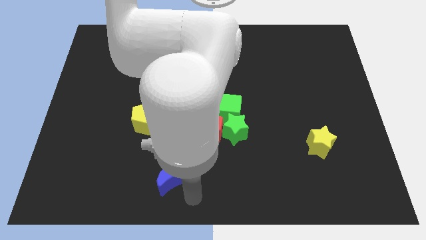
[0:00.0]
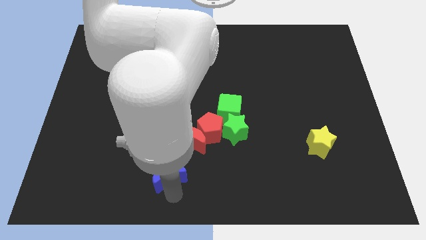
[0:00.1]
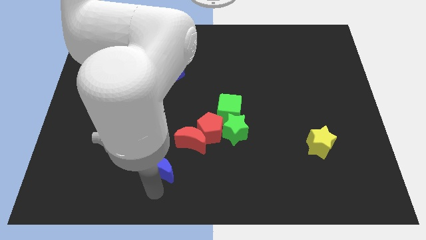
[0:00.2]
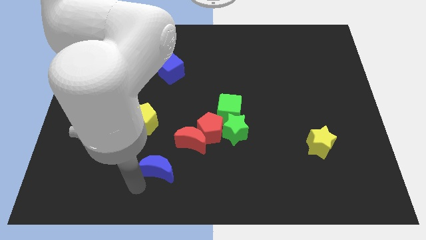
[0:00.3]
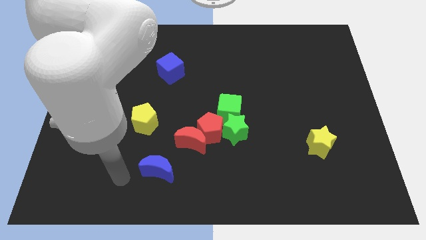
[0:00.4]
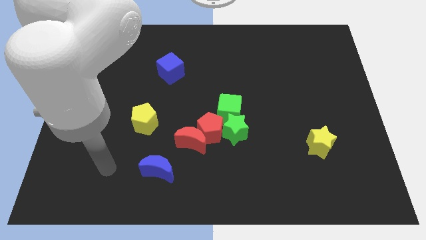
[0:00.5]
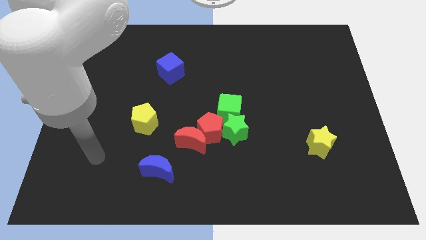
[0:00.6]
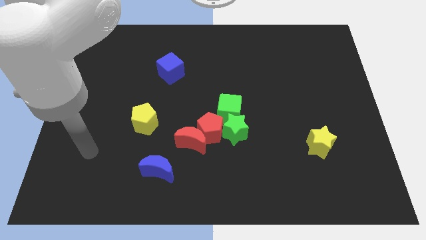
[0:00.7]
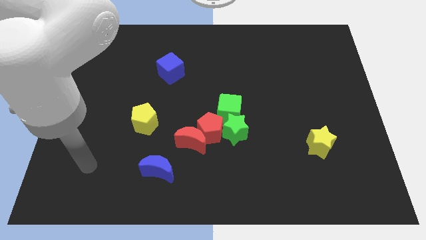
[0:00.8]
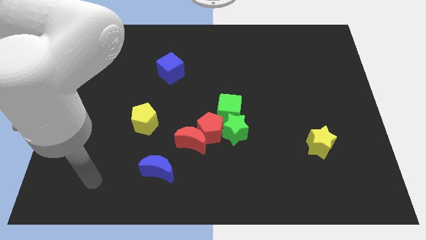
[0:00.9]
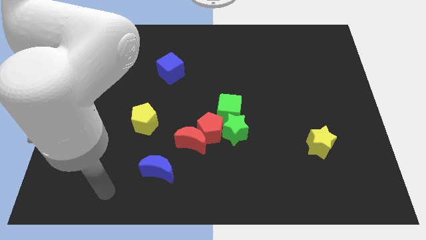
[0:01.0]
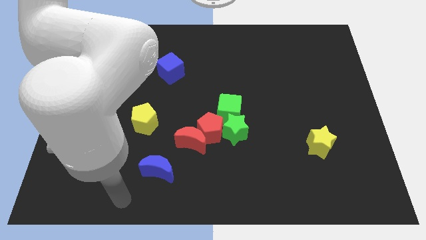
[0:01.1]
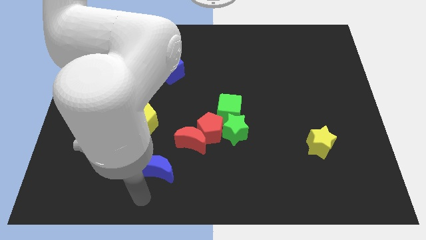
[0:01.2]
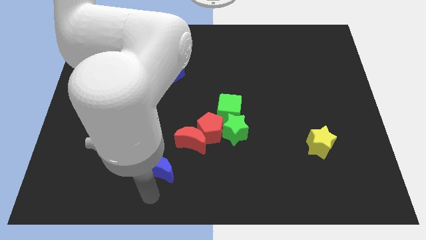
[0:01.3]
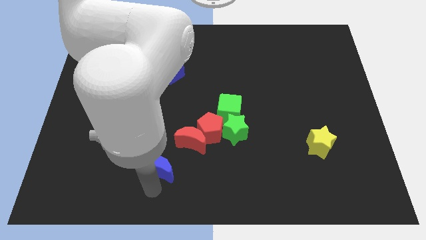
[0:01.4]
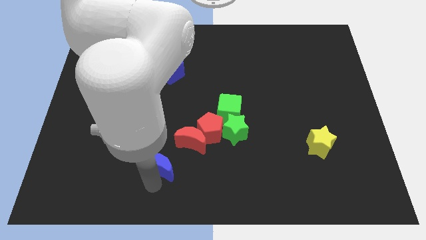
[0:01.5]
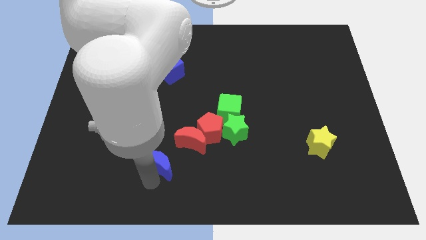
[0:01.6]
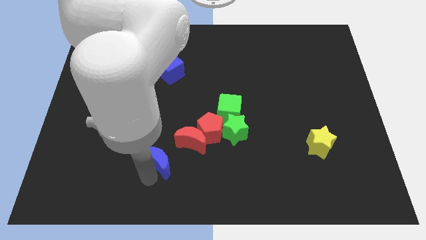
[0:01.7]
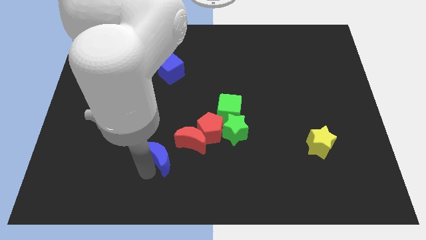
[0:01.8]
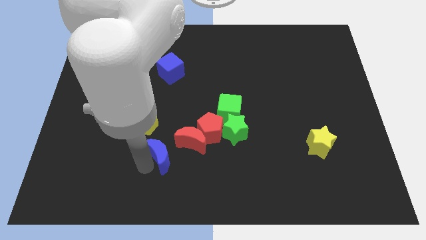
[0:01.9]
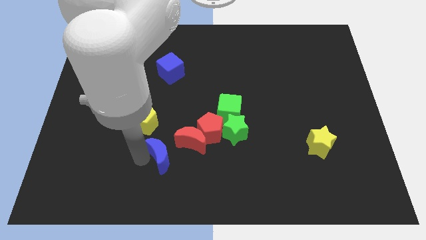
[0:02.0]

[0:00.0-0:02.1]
move the blue moon close to the red moon

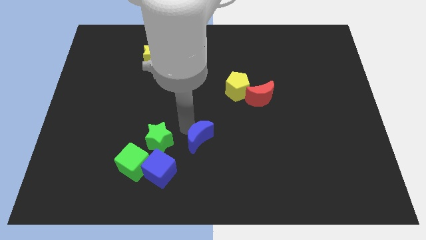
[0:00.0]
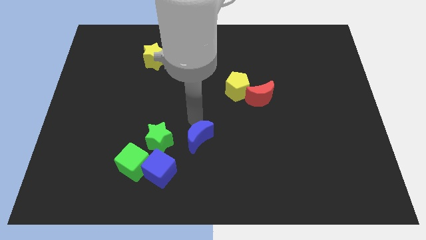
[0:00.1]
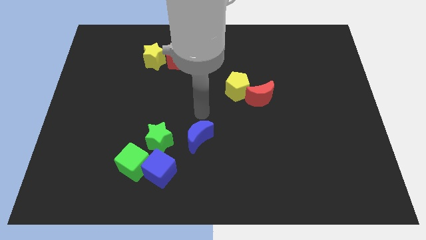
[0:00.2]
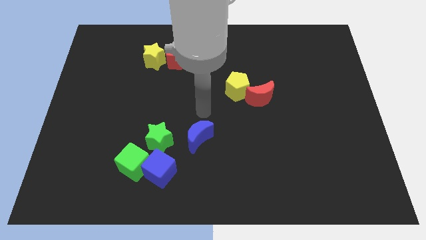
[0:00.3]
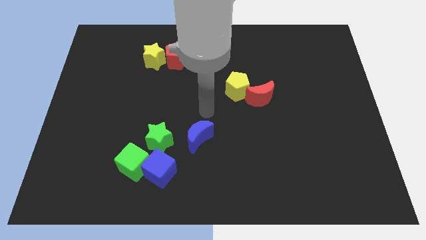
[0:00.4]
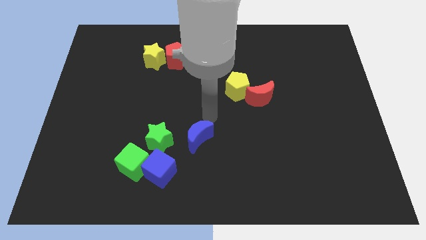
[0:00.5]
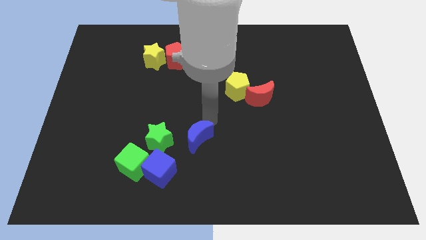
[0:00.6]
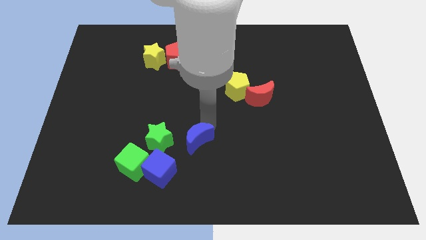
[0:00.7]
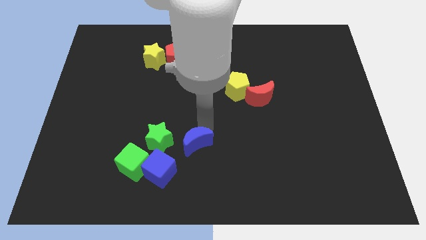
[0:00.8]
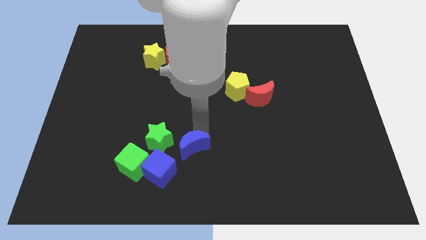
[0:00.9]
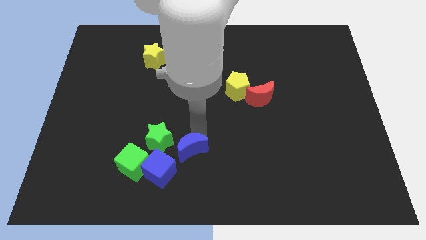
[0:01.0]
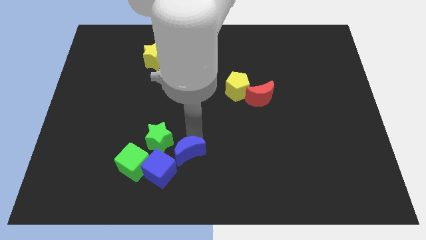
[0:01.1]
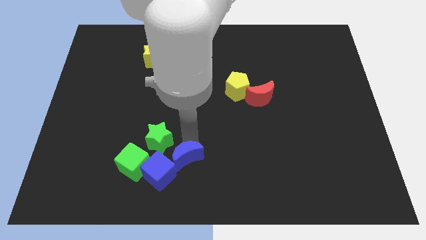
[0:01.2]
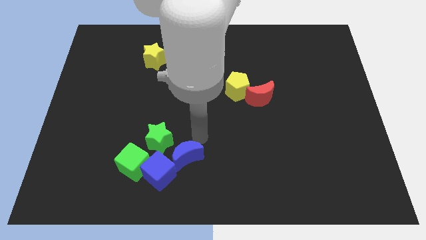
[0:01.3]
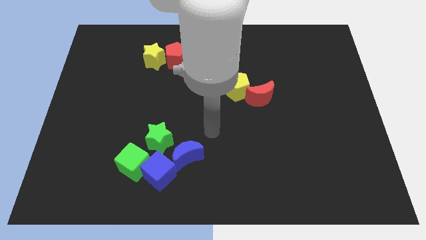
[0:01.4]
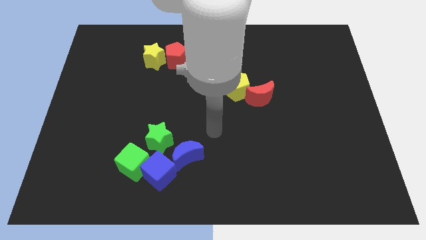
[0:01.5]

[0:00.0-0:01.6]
push the blue crescent into the blue cube

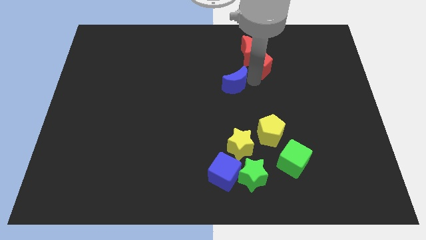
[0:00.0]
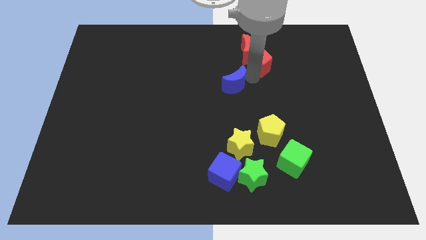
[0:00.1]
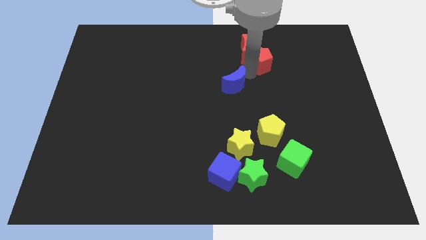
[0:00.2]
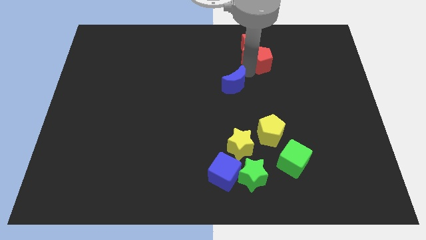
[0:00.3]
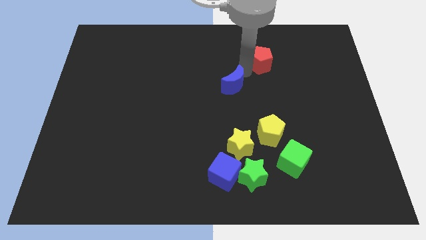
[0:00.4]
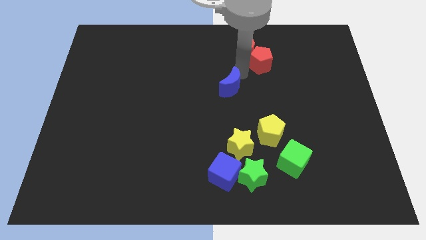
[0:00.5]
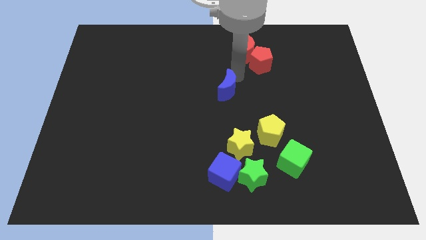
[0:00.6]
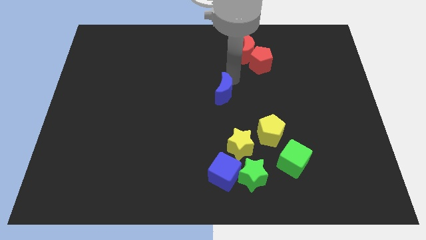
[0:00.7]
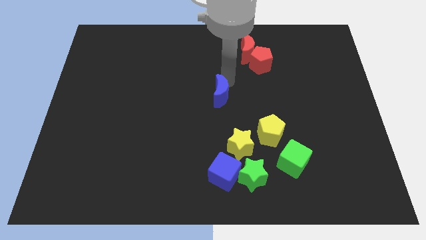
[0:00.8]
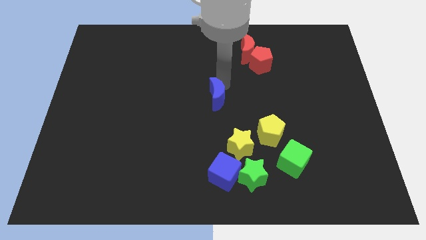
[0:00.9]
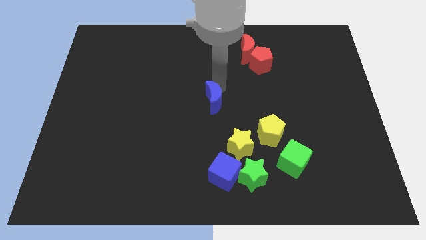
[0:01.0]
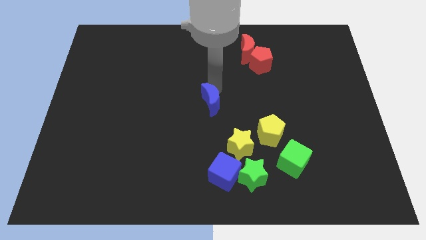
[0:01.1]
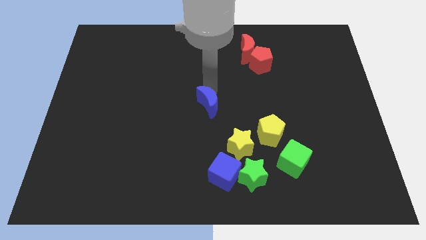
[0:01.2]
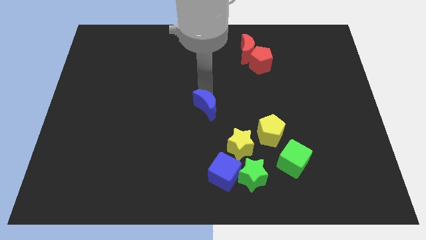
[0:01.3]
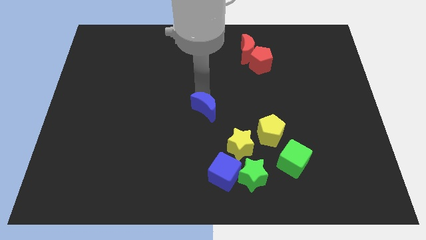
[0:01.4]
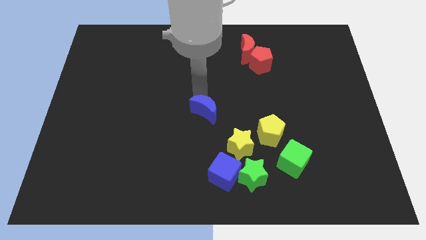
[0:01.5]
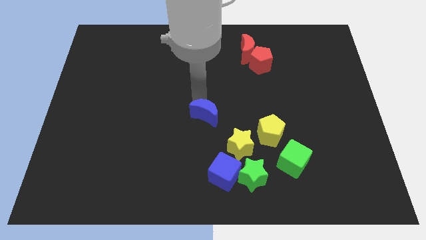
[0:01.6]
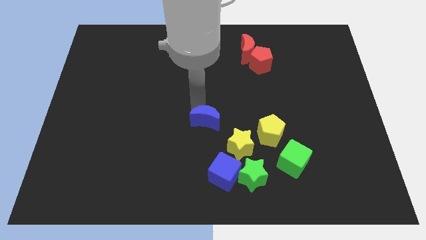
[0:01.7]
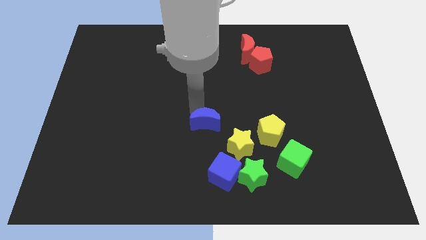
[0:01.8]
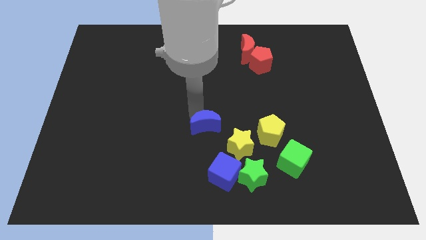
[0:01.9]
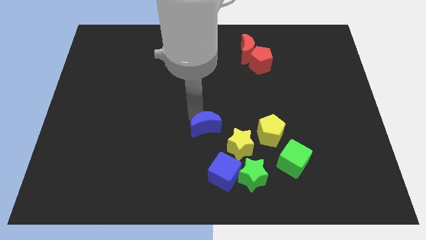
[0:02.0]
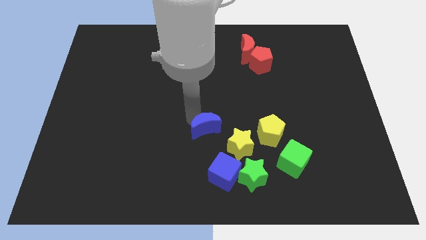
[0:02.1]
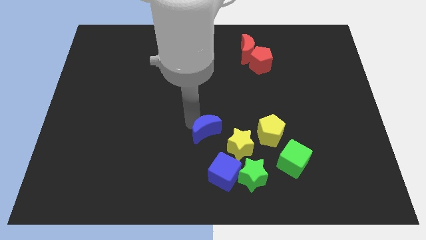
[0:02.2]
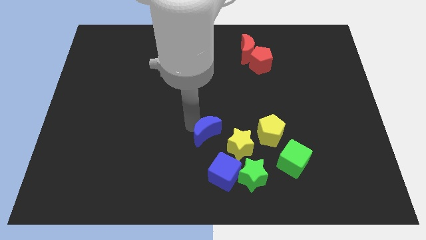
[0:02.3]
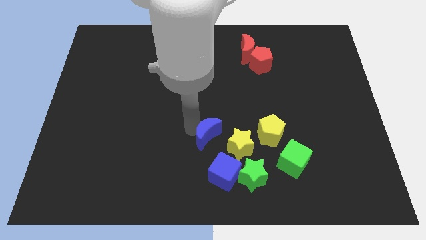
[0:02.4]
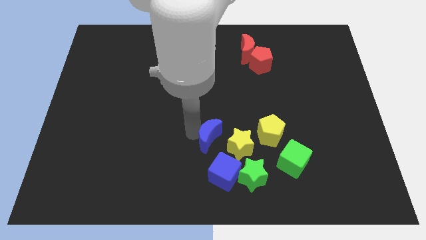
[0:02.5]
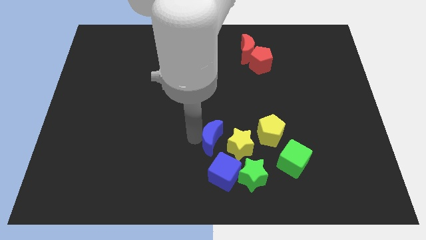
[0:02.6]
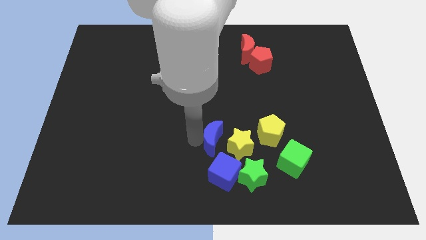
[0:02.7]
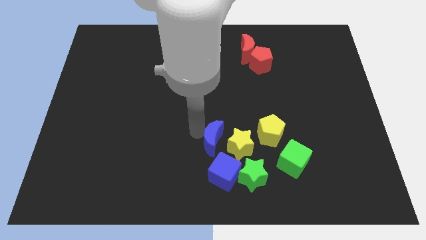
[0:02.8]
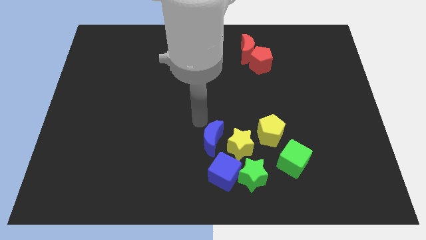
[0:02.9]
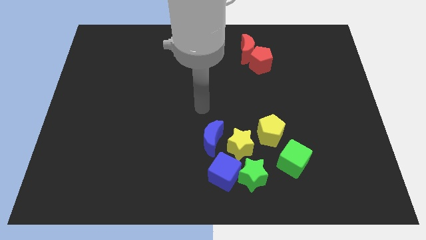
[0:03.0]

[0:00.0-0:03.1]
place blue moon to the left of yellow star

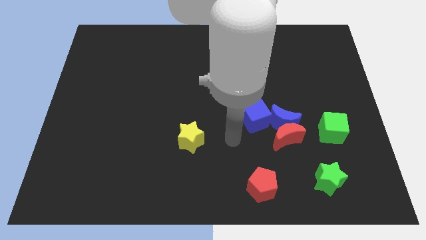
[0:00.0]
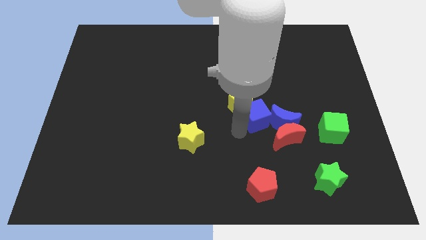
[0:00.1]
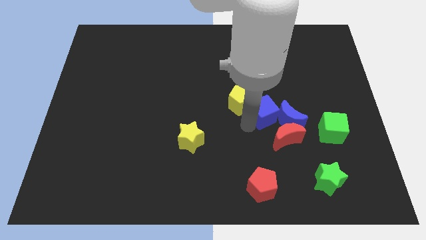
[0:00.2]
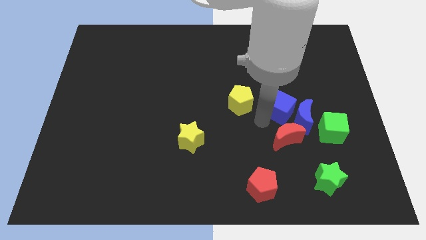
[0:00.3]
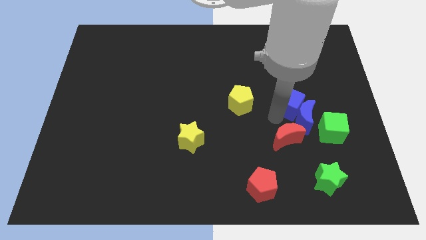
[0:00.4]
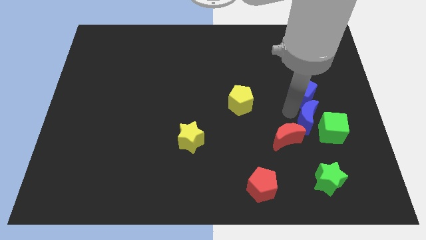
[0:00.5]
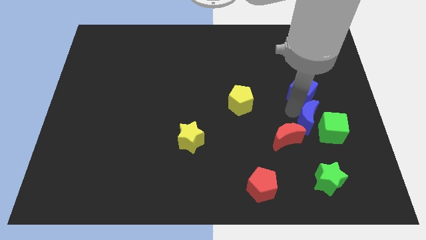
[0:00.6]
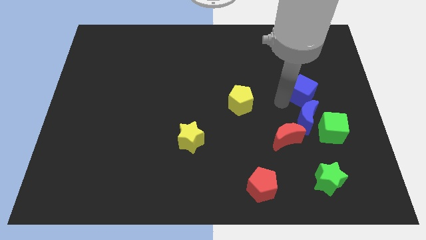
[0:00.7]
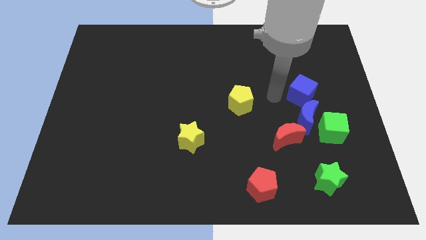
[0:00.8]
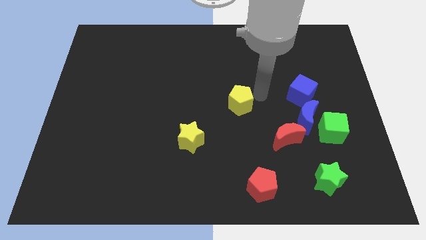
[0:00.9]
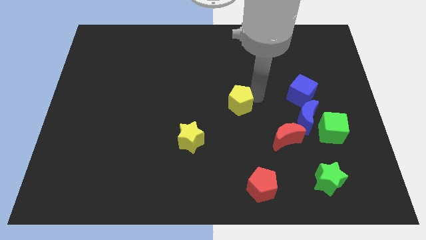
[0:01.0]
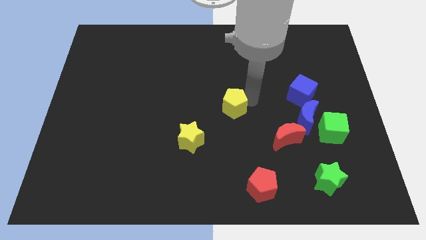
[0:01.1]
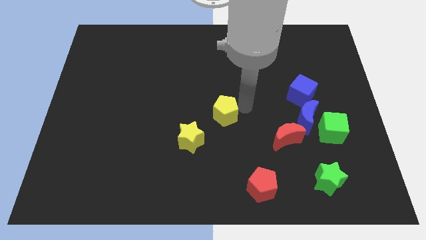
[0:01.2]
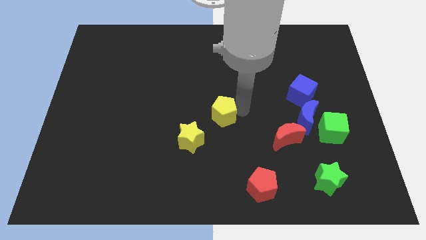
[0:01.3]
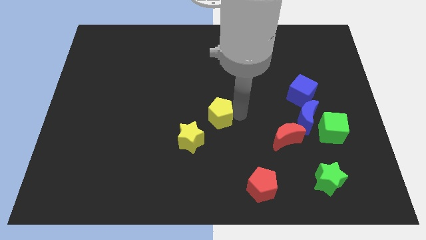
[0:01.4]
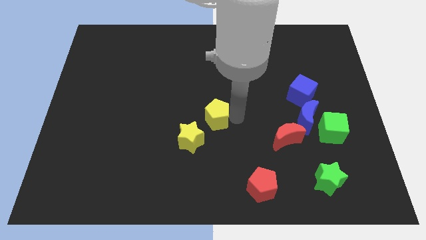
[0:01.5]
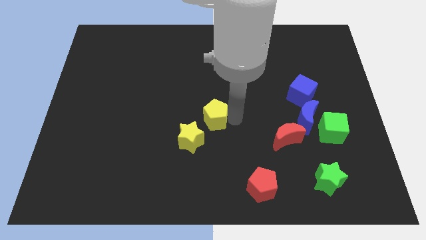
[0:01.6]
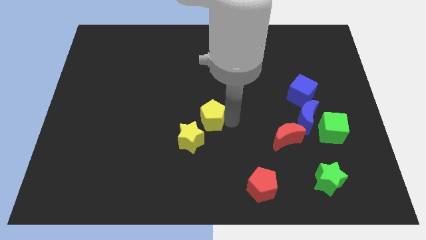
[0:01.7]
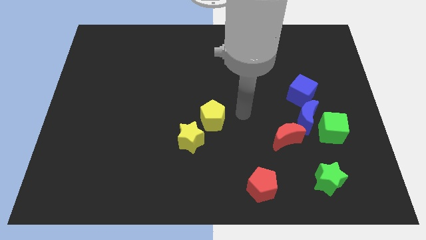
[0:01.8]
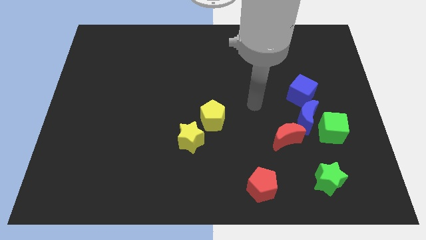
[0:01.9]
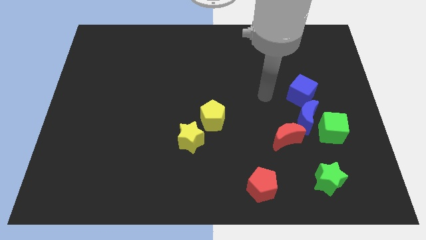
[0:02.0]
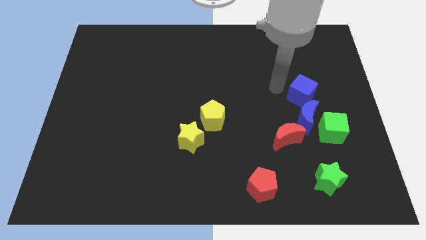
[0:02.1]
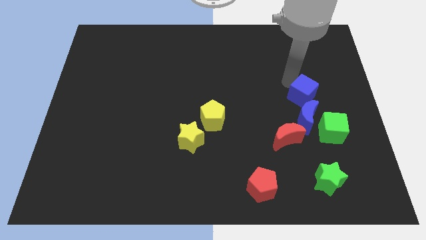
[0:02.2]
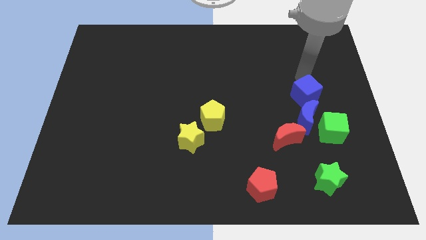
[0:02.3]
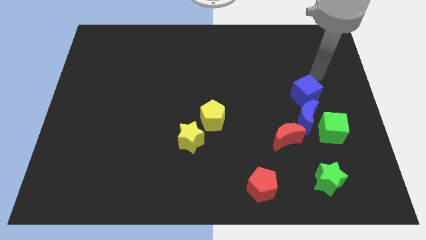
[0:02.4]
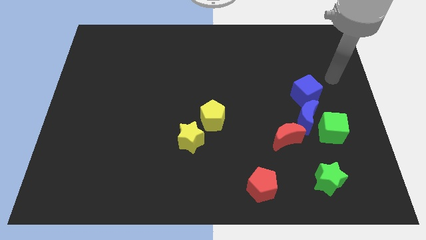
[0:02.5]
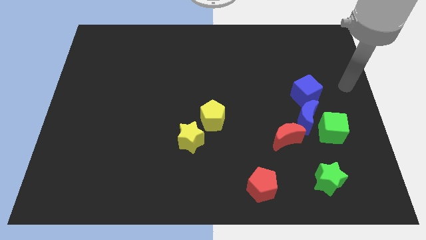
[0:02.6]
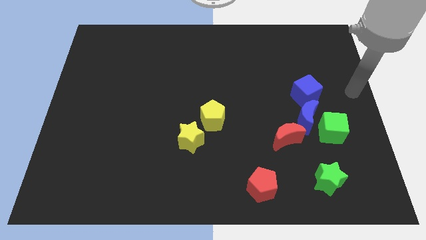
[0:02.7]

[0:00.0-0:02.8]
separate the blue cube and yellow pentagon from each other
